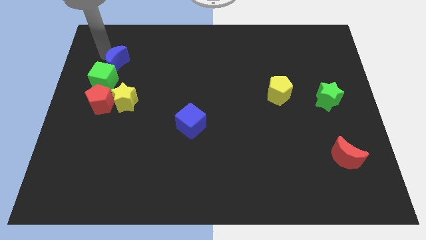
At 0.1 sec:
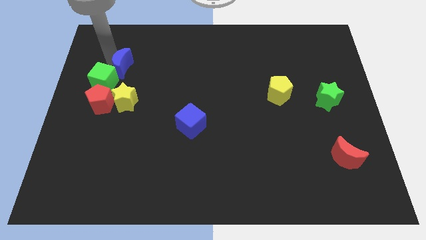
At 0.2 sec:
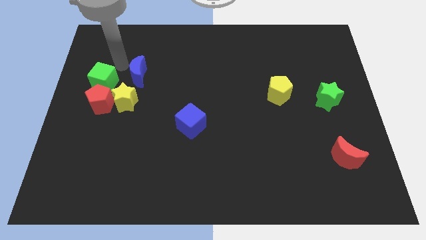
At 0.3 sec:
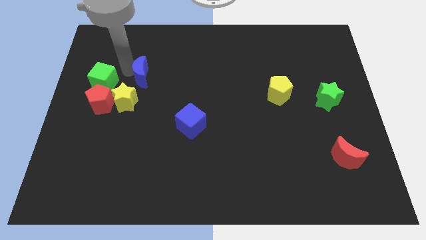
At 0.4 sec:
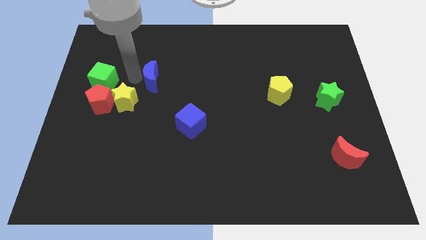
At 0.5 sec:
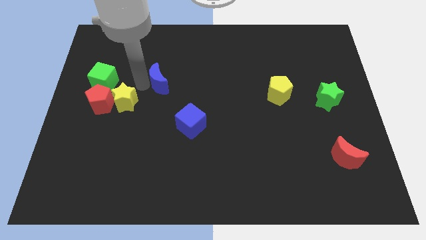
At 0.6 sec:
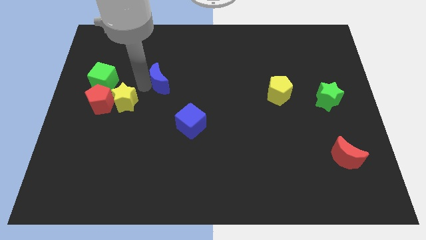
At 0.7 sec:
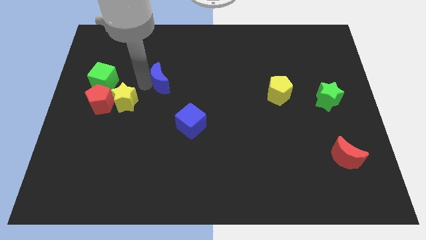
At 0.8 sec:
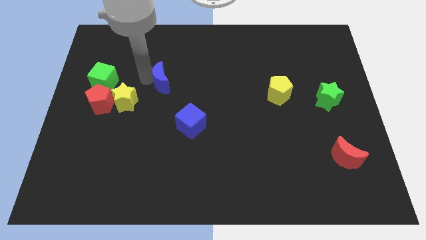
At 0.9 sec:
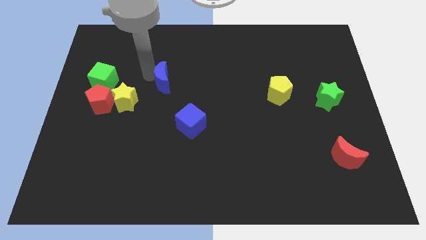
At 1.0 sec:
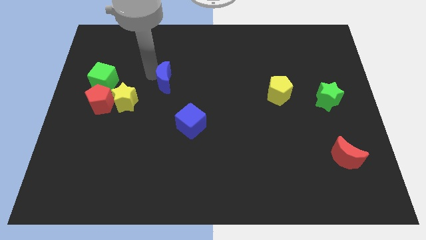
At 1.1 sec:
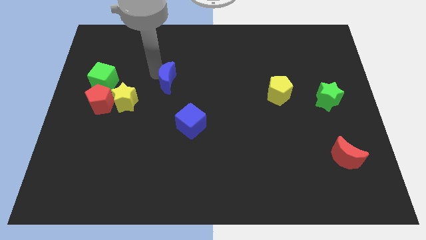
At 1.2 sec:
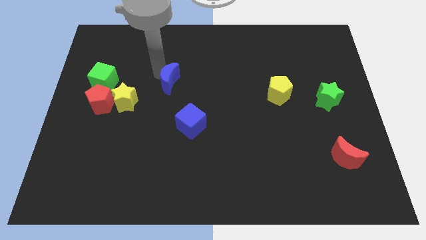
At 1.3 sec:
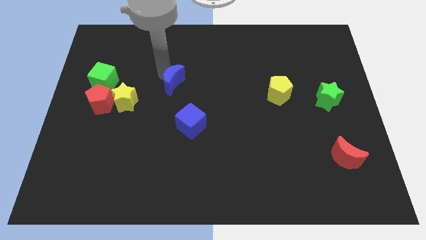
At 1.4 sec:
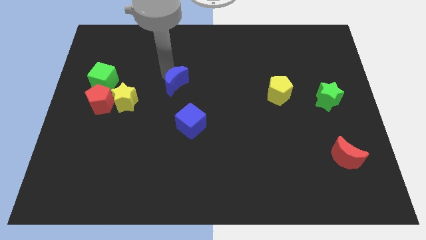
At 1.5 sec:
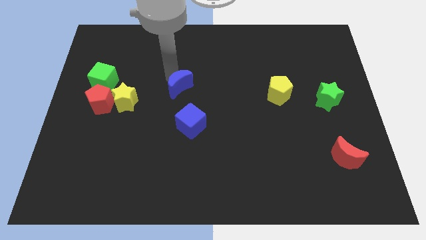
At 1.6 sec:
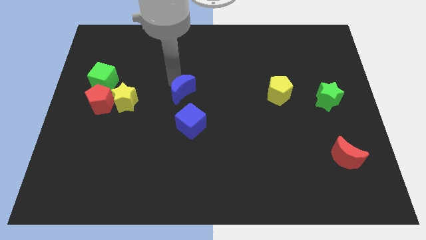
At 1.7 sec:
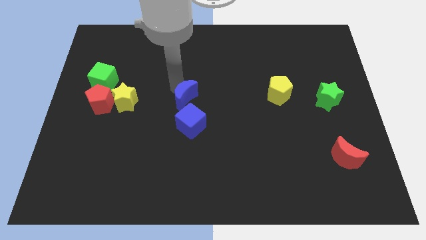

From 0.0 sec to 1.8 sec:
place the blue crescent above the blue cube

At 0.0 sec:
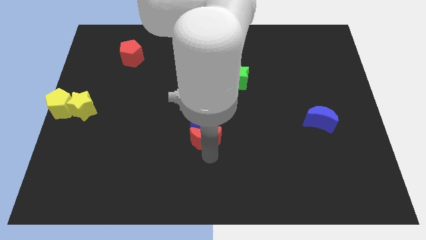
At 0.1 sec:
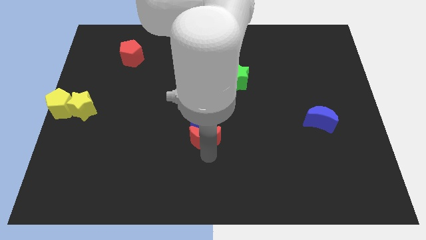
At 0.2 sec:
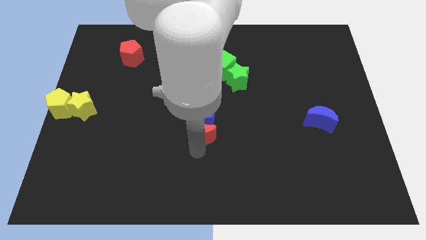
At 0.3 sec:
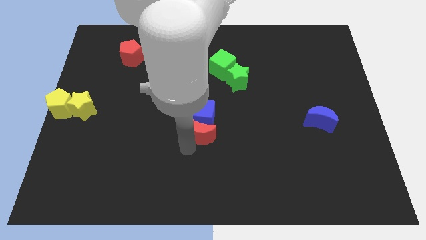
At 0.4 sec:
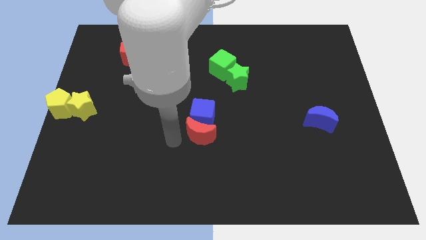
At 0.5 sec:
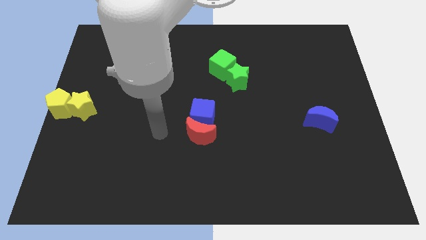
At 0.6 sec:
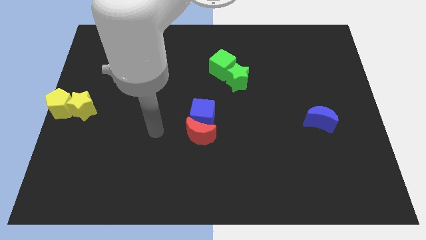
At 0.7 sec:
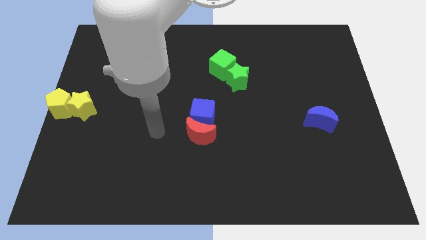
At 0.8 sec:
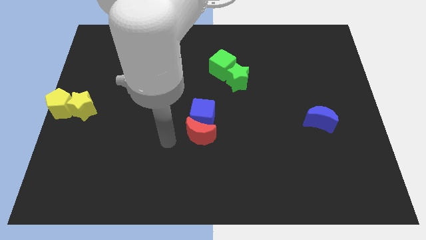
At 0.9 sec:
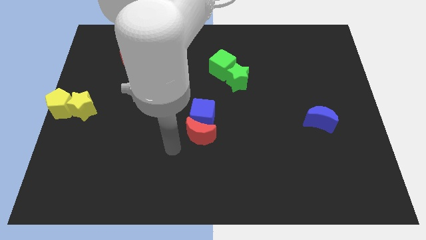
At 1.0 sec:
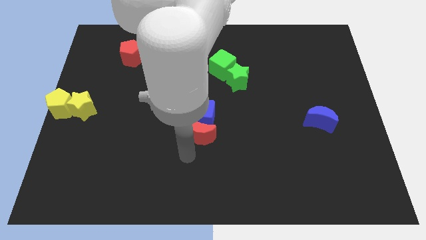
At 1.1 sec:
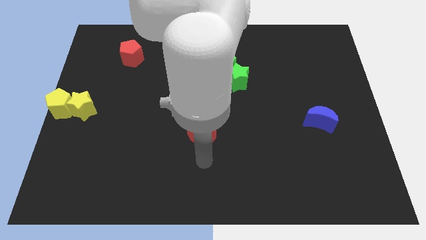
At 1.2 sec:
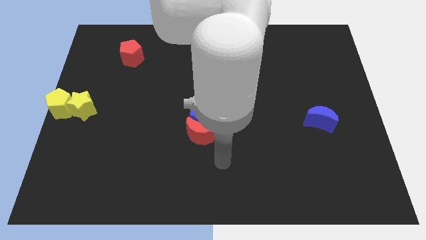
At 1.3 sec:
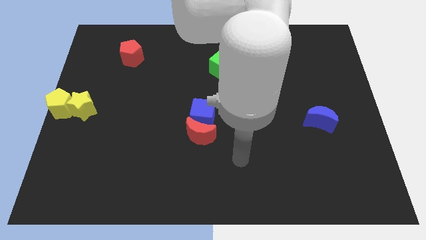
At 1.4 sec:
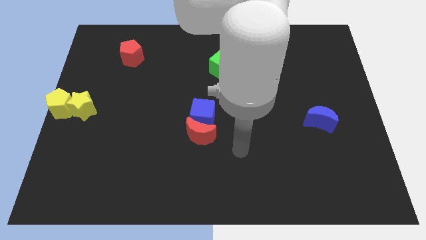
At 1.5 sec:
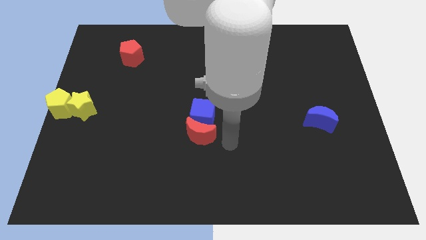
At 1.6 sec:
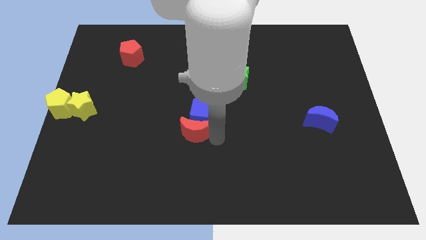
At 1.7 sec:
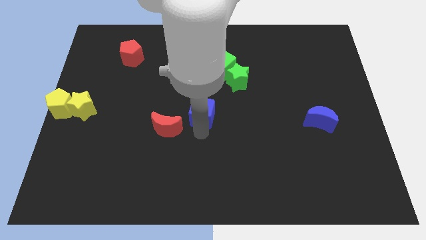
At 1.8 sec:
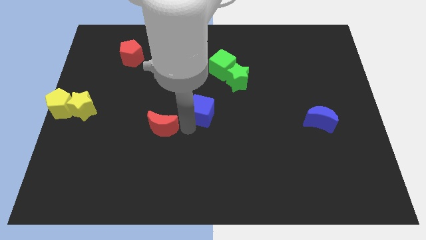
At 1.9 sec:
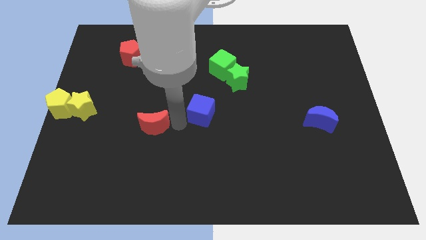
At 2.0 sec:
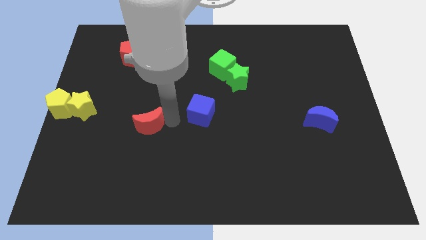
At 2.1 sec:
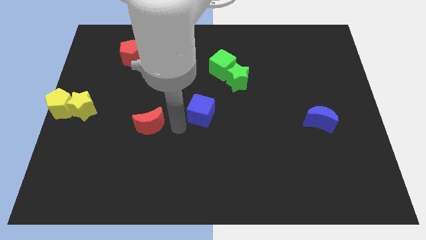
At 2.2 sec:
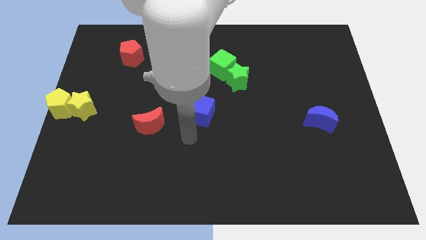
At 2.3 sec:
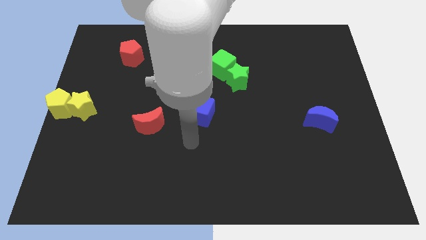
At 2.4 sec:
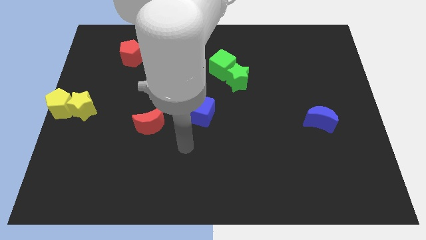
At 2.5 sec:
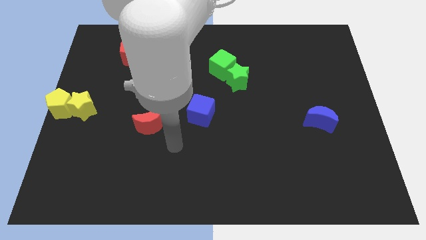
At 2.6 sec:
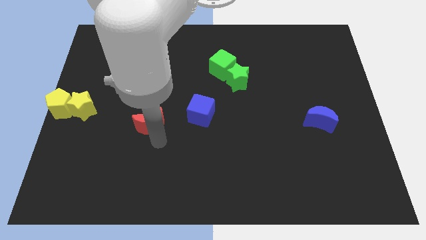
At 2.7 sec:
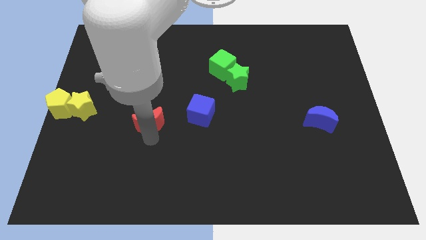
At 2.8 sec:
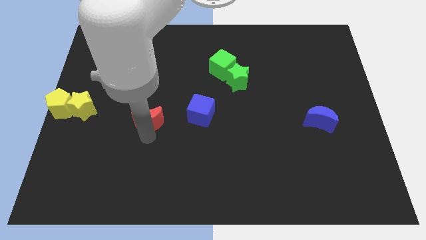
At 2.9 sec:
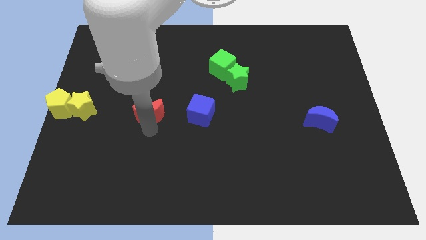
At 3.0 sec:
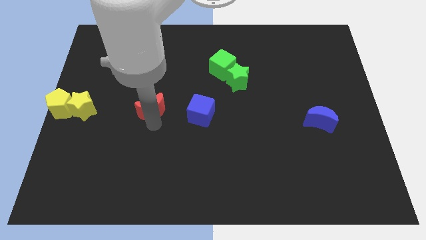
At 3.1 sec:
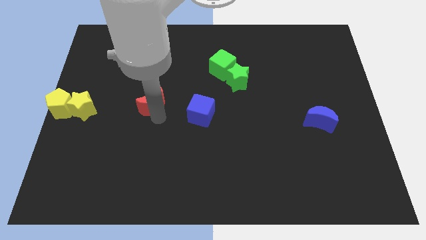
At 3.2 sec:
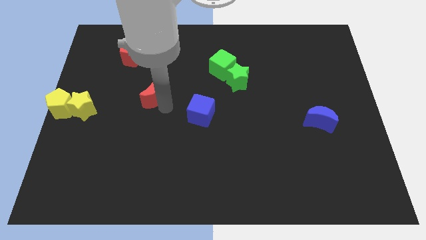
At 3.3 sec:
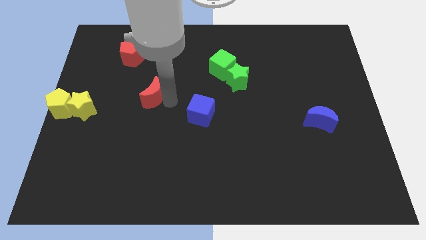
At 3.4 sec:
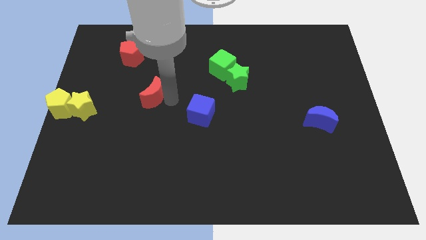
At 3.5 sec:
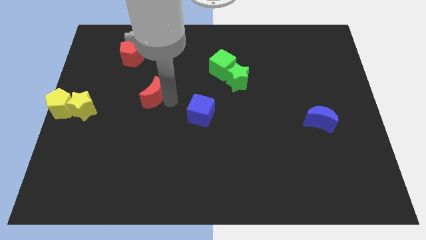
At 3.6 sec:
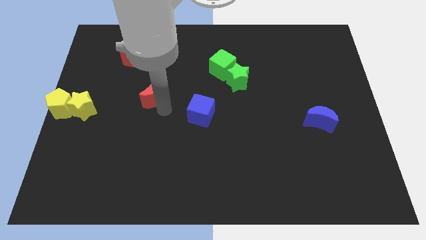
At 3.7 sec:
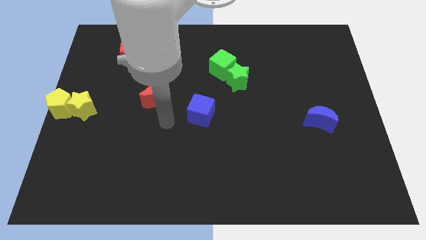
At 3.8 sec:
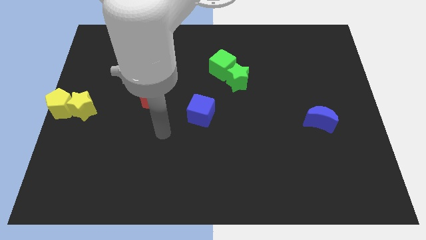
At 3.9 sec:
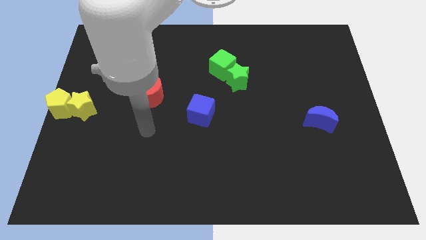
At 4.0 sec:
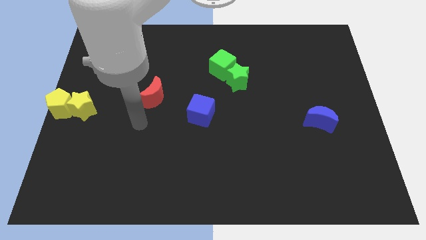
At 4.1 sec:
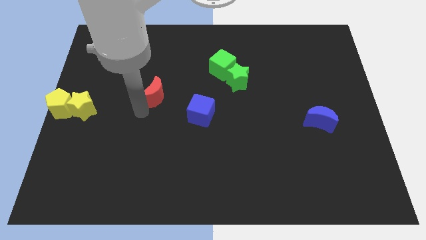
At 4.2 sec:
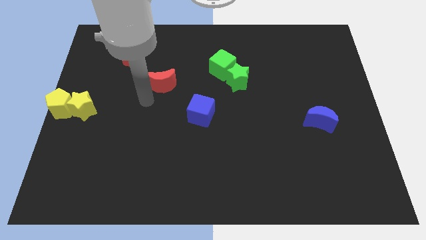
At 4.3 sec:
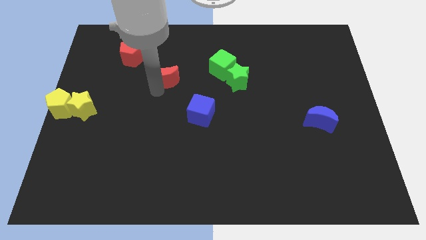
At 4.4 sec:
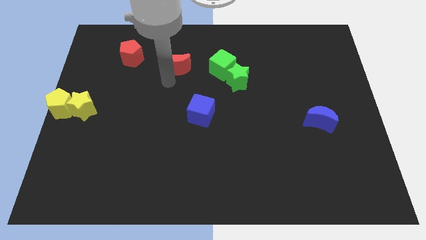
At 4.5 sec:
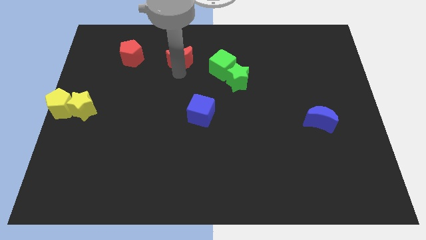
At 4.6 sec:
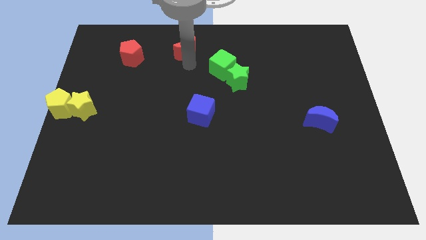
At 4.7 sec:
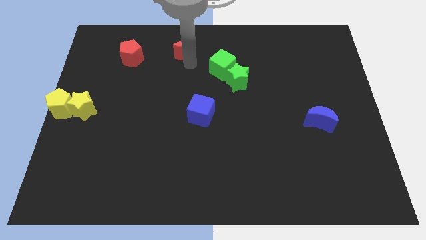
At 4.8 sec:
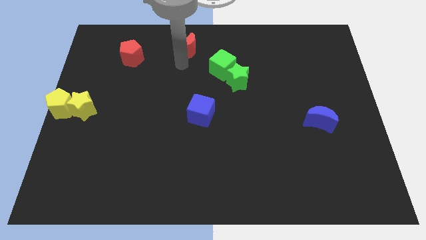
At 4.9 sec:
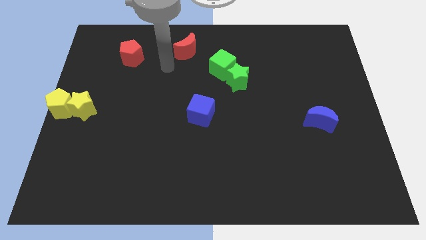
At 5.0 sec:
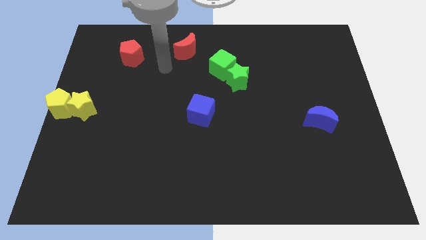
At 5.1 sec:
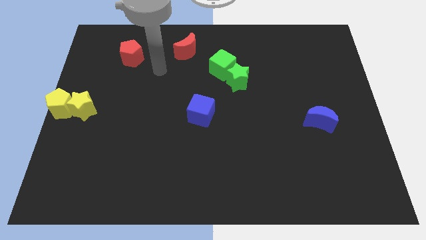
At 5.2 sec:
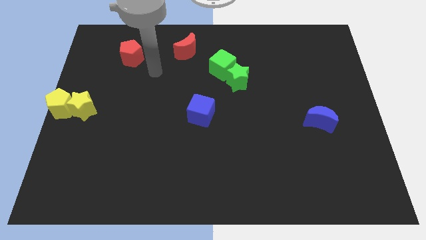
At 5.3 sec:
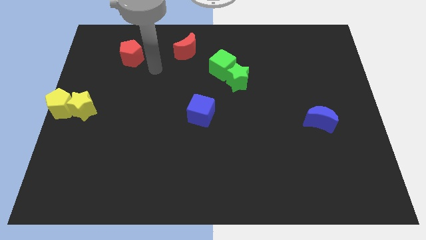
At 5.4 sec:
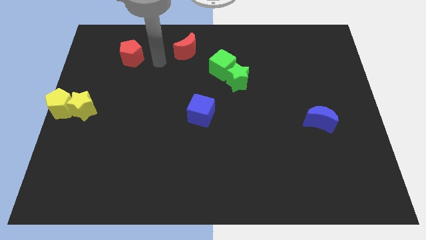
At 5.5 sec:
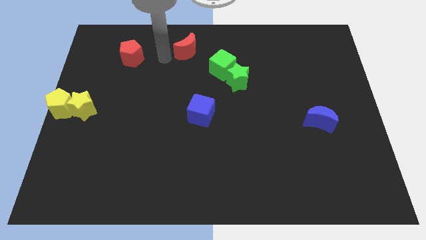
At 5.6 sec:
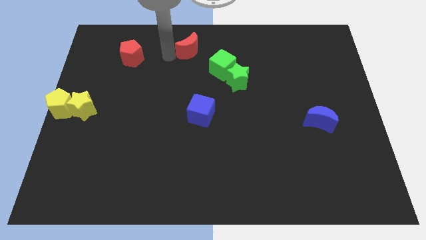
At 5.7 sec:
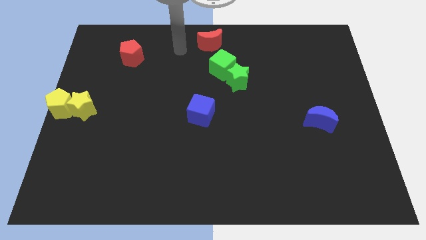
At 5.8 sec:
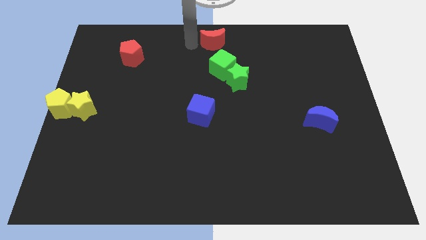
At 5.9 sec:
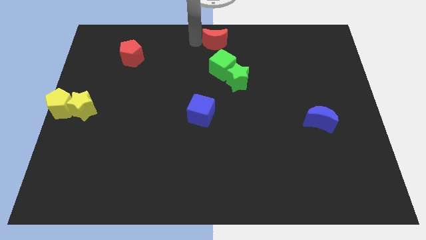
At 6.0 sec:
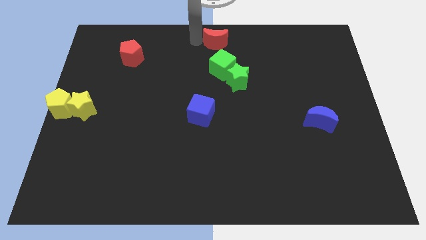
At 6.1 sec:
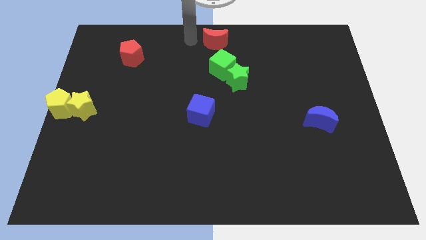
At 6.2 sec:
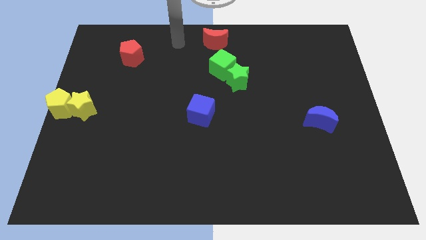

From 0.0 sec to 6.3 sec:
push the red crescent to the top center of the board

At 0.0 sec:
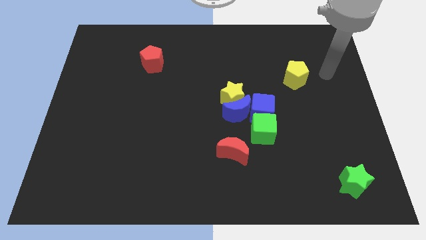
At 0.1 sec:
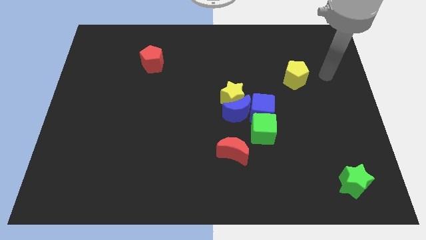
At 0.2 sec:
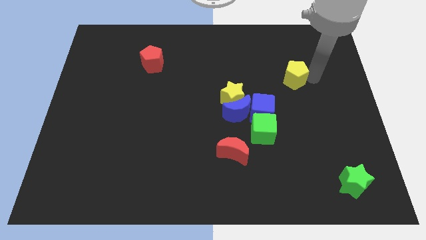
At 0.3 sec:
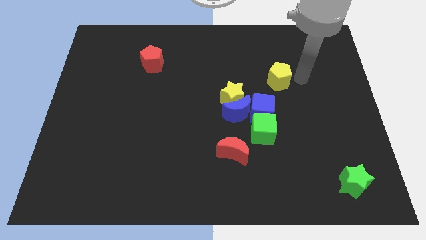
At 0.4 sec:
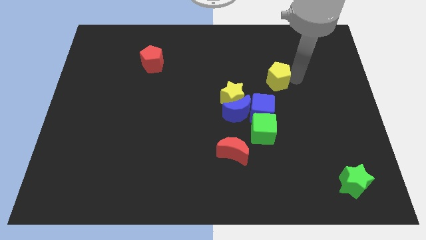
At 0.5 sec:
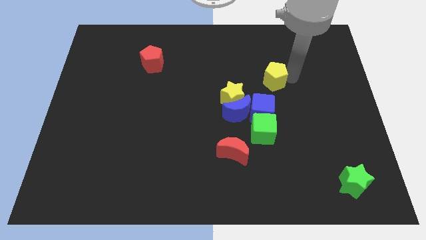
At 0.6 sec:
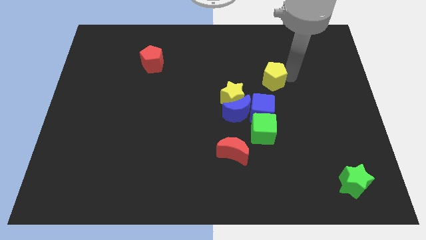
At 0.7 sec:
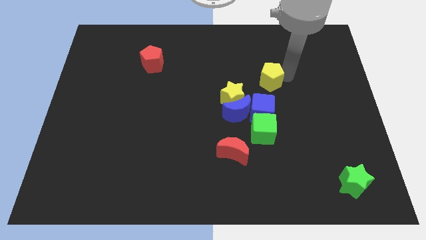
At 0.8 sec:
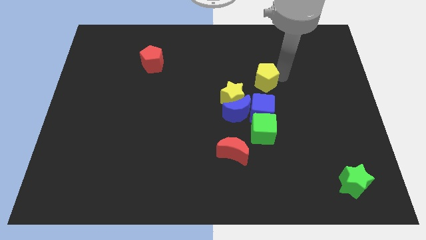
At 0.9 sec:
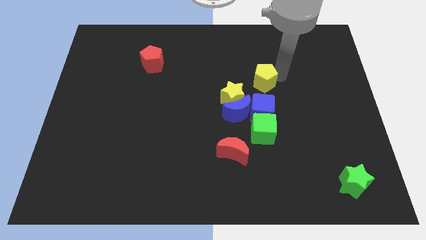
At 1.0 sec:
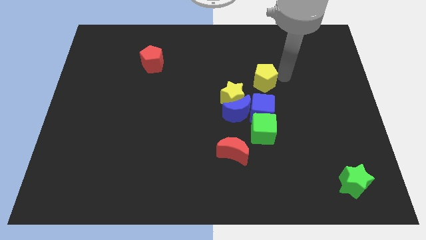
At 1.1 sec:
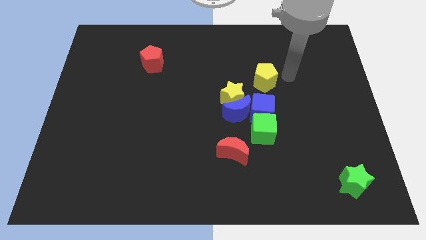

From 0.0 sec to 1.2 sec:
push yellow pentagon towards yellow star
